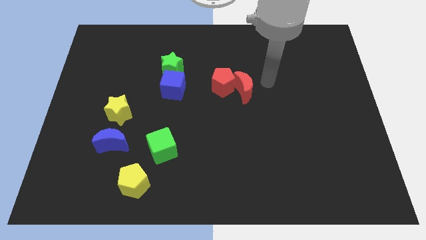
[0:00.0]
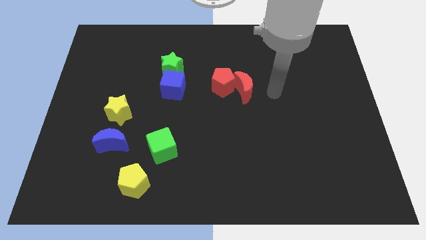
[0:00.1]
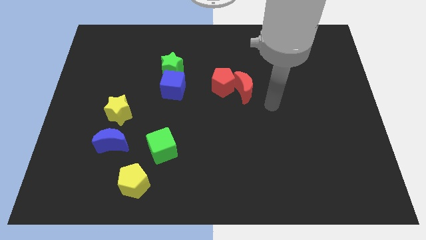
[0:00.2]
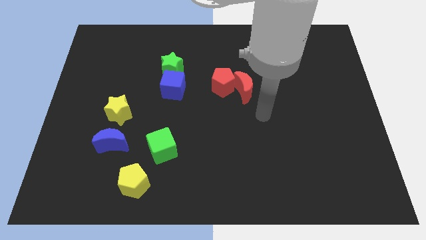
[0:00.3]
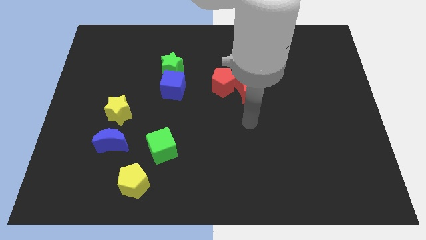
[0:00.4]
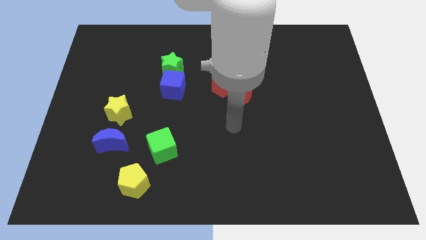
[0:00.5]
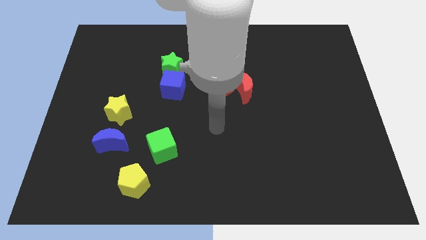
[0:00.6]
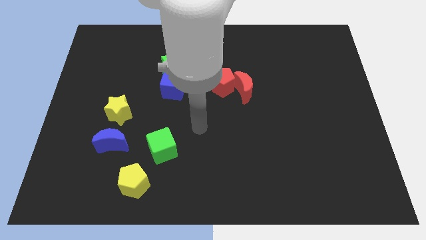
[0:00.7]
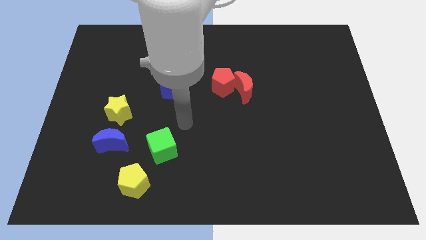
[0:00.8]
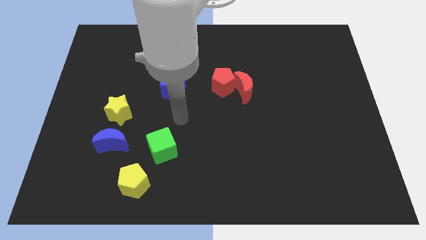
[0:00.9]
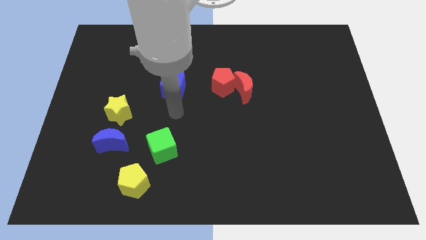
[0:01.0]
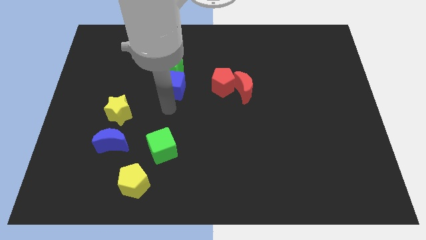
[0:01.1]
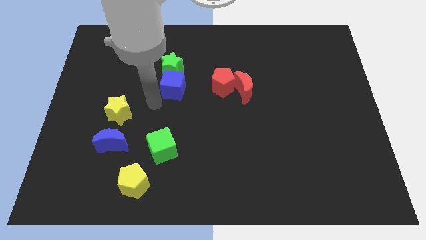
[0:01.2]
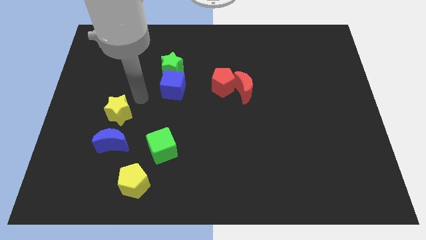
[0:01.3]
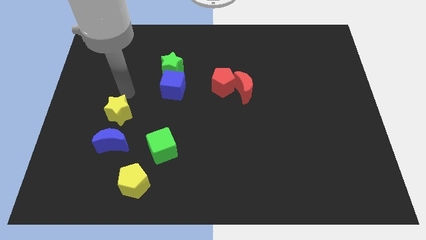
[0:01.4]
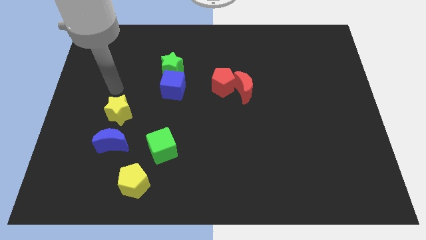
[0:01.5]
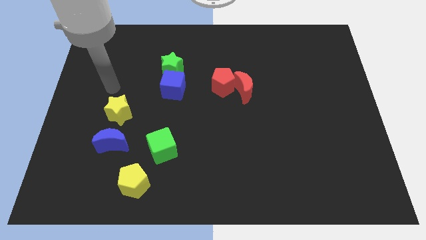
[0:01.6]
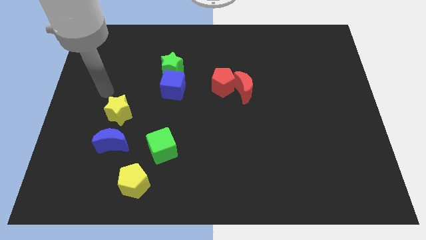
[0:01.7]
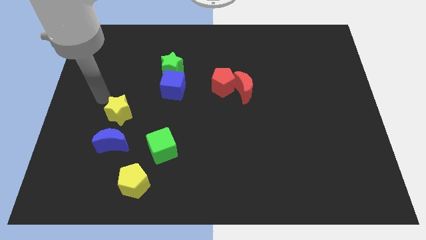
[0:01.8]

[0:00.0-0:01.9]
move your arm towards the yellow star

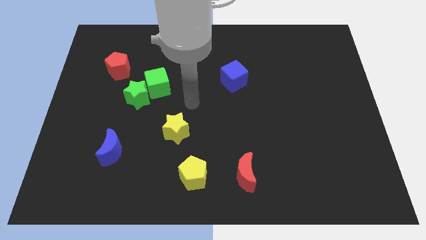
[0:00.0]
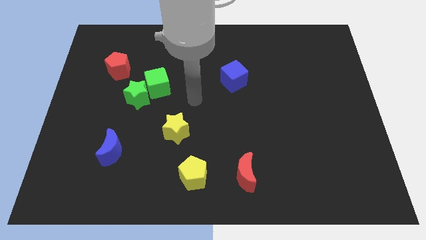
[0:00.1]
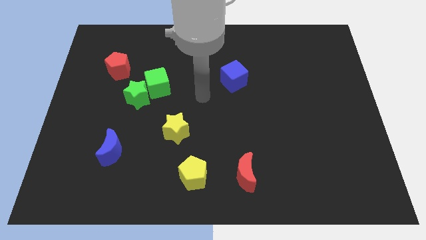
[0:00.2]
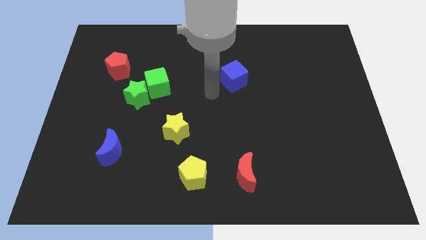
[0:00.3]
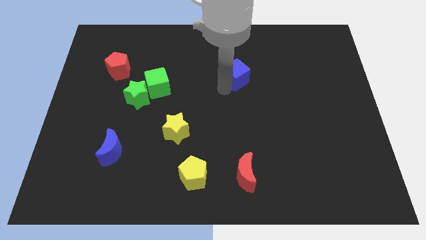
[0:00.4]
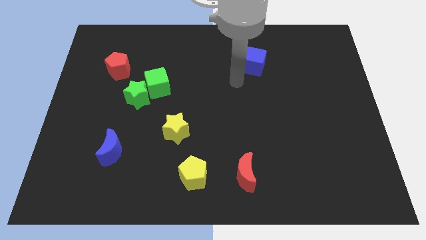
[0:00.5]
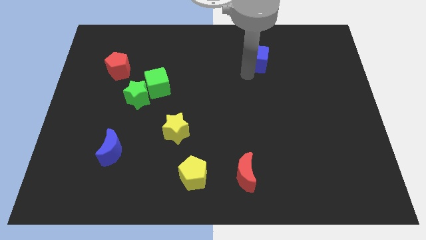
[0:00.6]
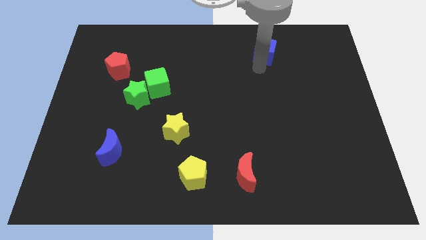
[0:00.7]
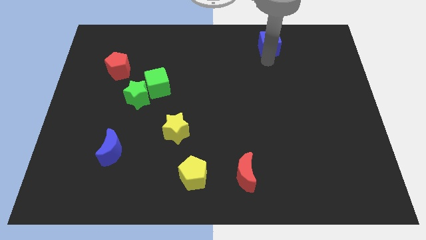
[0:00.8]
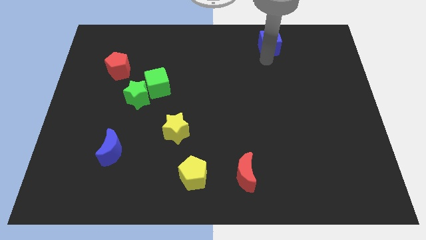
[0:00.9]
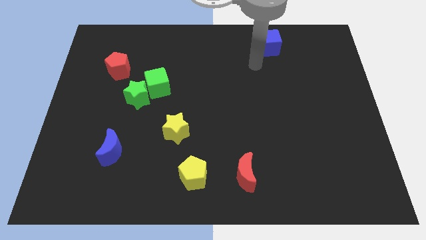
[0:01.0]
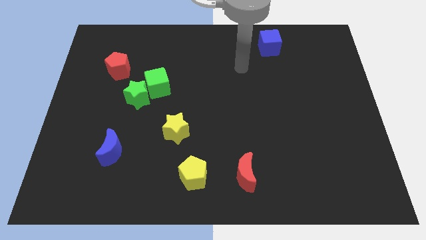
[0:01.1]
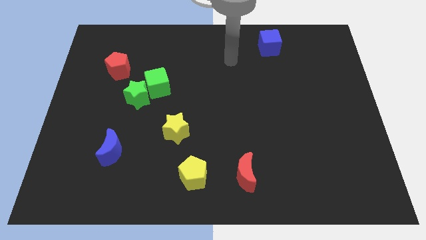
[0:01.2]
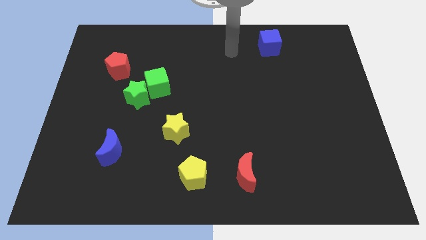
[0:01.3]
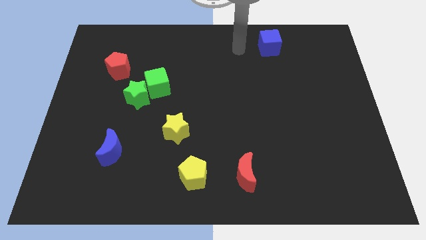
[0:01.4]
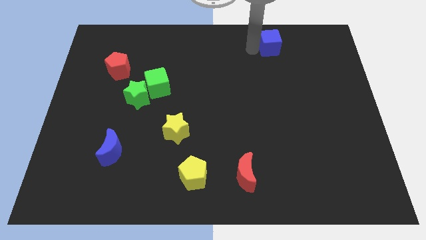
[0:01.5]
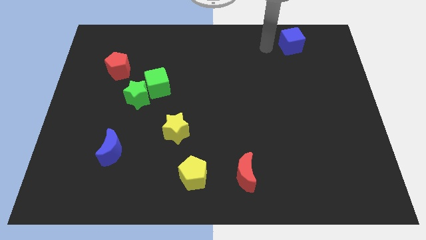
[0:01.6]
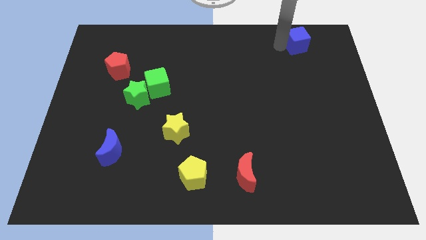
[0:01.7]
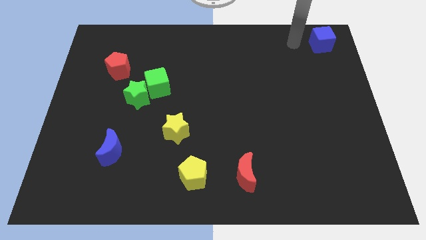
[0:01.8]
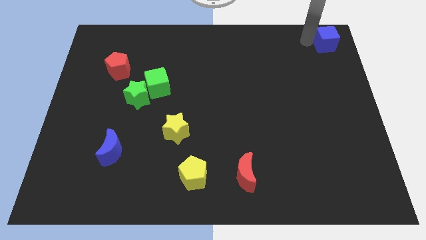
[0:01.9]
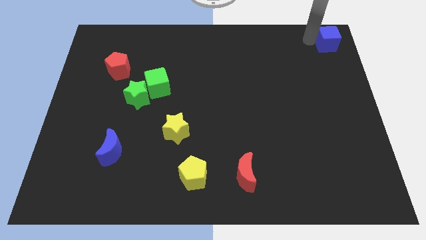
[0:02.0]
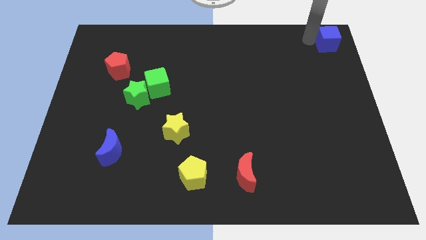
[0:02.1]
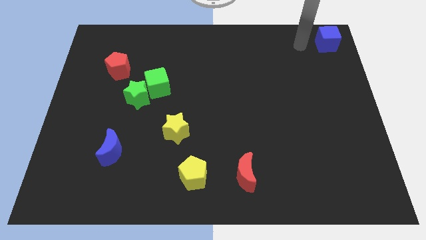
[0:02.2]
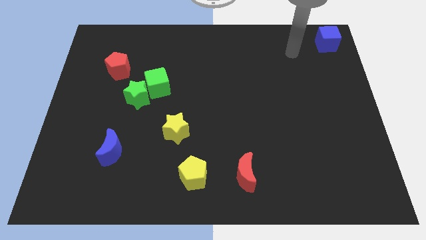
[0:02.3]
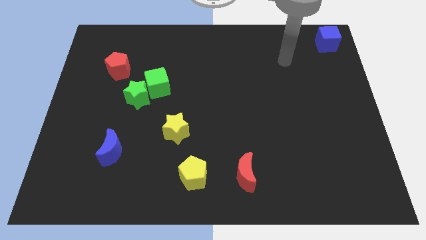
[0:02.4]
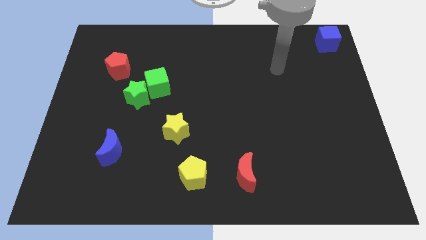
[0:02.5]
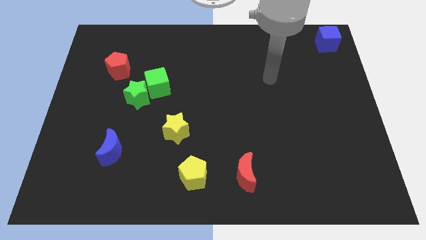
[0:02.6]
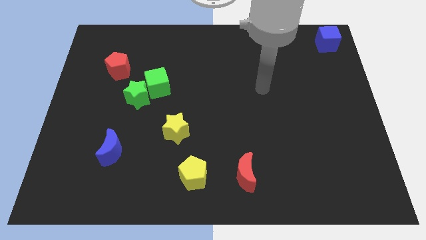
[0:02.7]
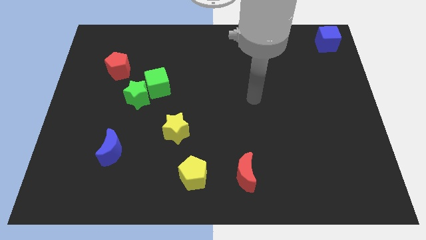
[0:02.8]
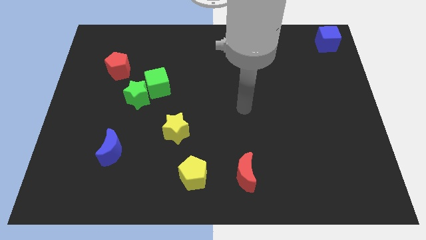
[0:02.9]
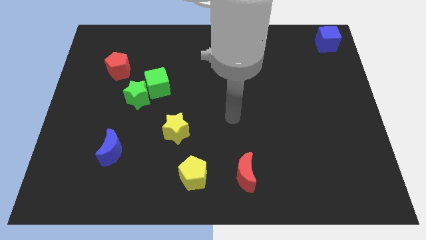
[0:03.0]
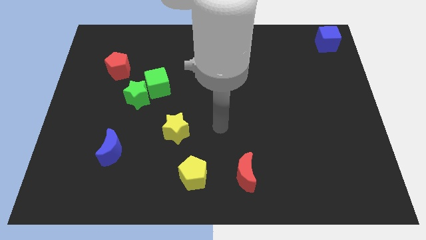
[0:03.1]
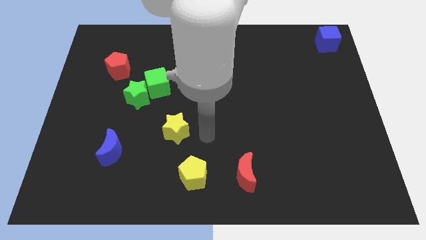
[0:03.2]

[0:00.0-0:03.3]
push the blue cube to the top right

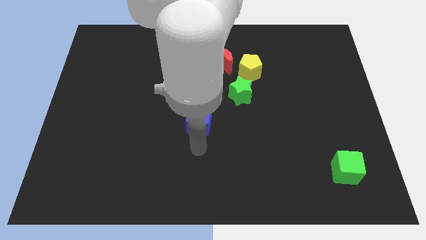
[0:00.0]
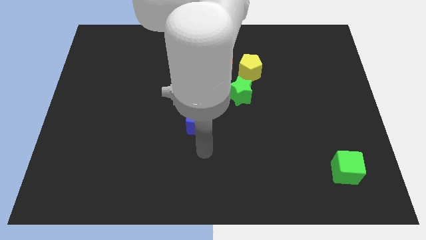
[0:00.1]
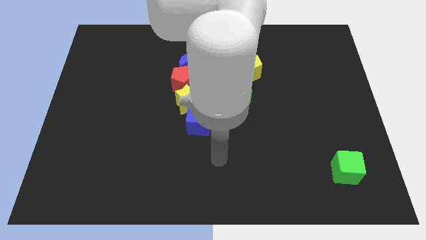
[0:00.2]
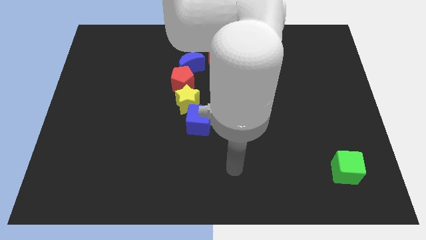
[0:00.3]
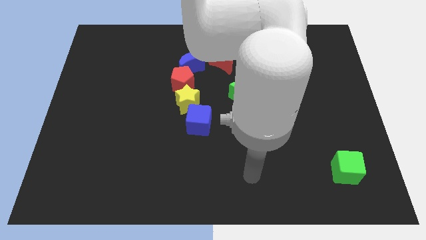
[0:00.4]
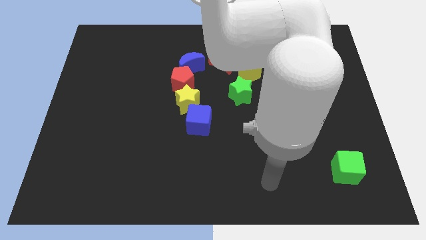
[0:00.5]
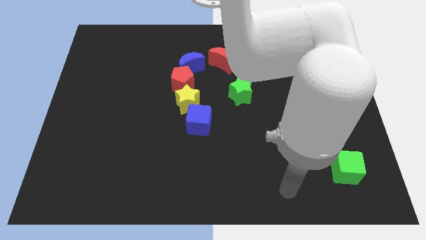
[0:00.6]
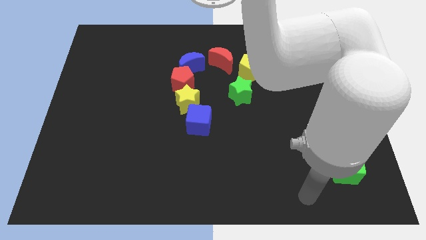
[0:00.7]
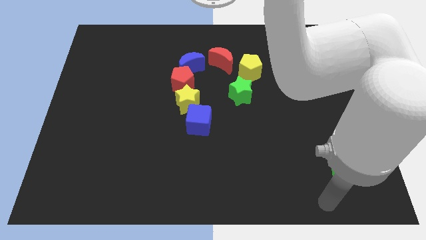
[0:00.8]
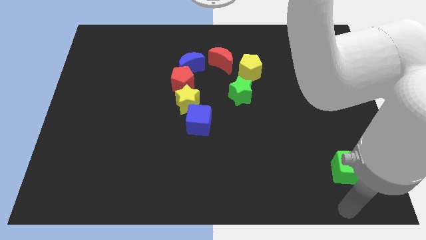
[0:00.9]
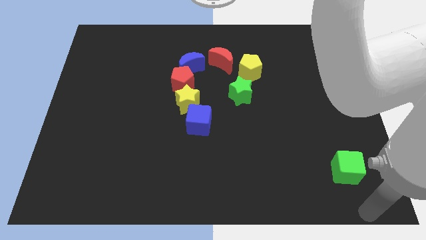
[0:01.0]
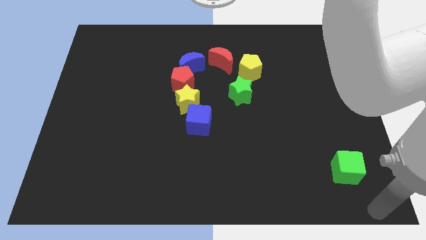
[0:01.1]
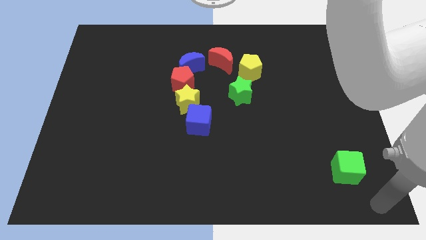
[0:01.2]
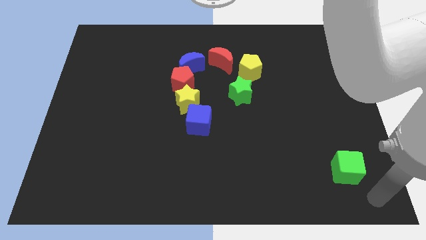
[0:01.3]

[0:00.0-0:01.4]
move away from the blue cube

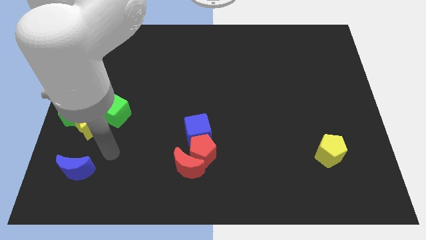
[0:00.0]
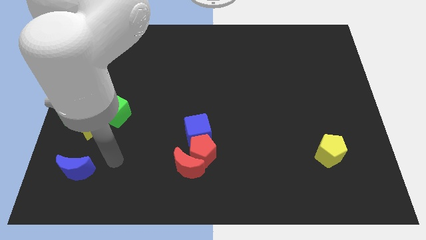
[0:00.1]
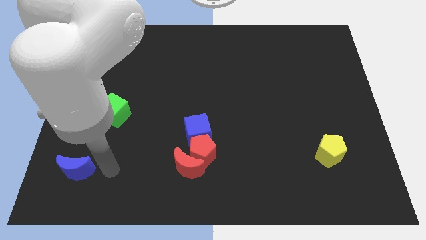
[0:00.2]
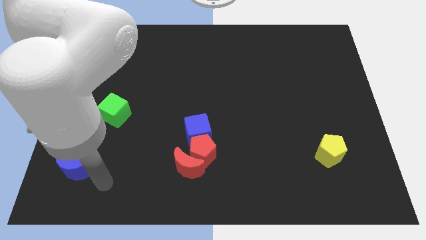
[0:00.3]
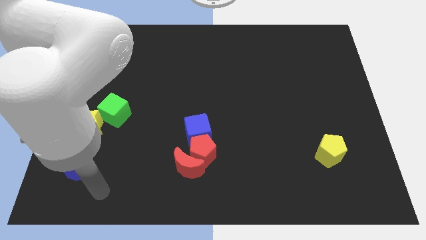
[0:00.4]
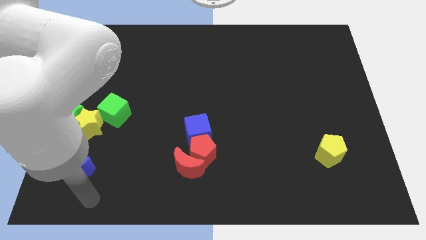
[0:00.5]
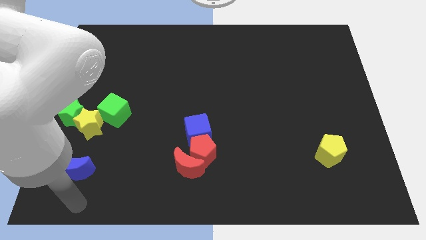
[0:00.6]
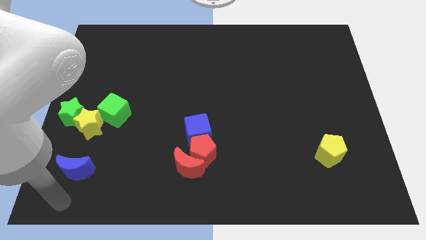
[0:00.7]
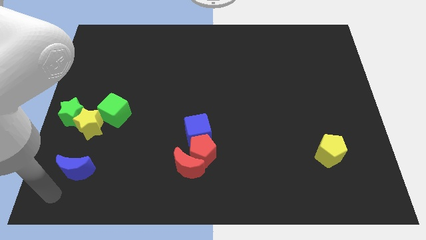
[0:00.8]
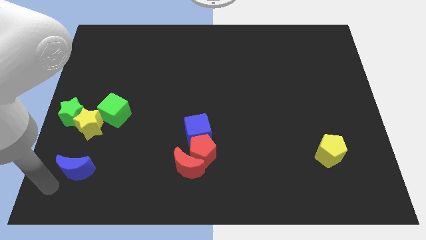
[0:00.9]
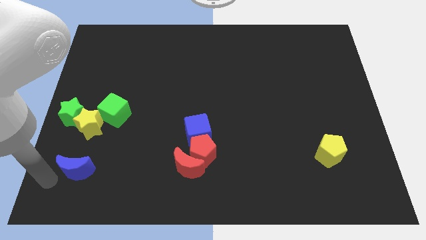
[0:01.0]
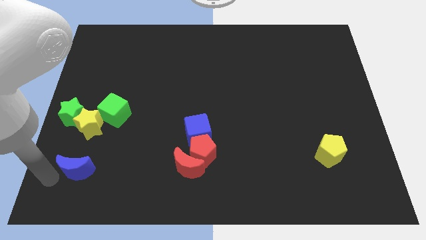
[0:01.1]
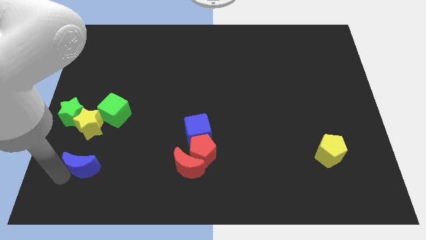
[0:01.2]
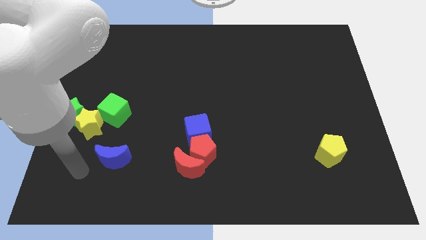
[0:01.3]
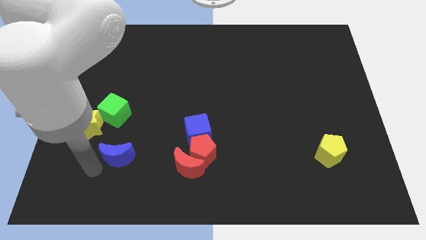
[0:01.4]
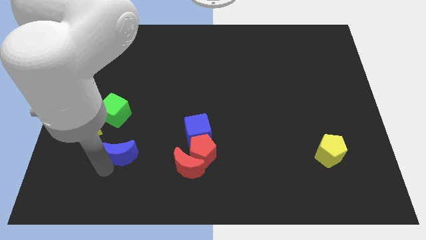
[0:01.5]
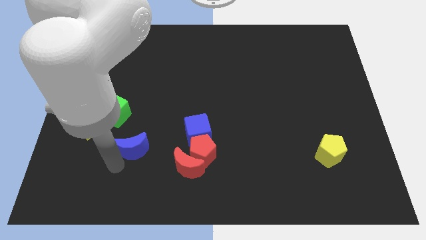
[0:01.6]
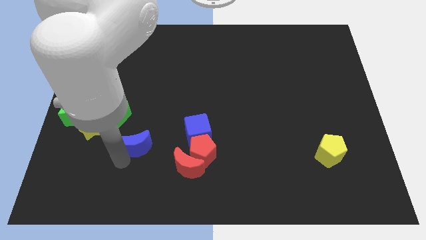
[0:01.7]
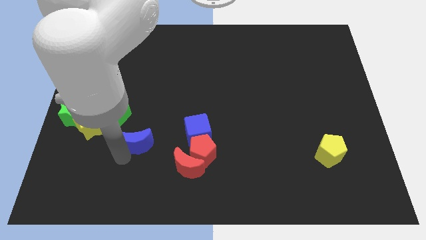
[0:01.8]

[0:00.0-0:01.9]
drag the blue moon towards the cenetr

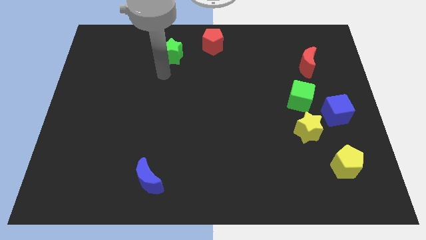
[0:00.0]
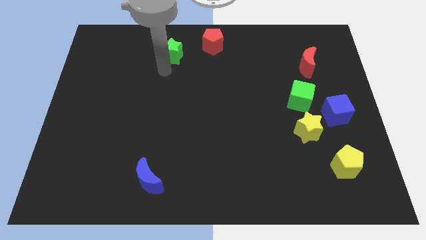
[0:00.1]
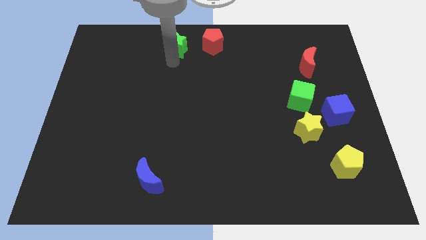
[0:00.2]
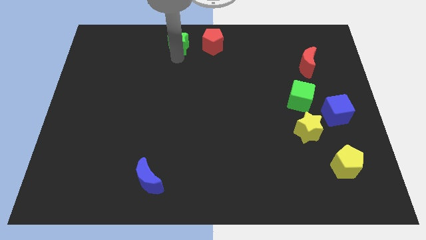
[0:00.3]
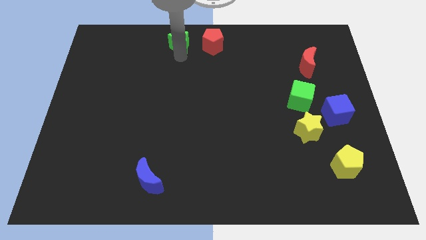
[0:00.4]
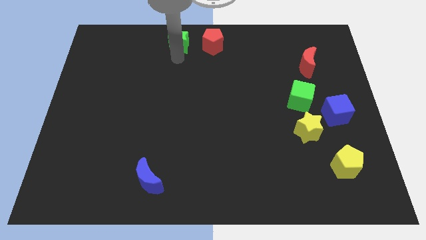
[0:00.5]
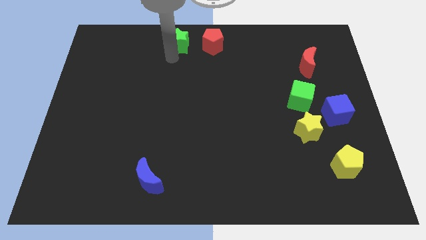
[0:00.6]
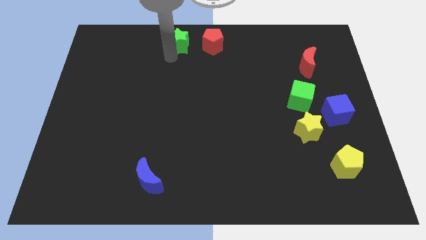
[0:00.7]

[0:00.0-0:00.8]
place the green star left to the red pentagon
